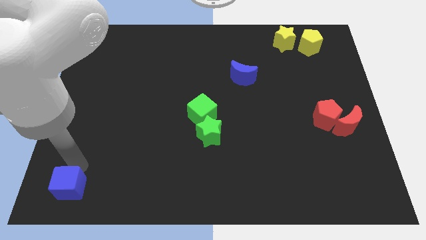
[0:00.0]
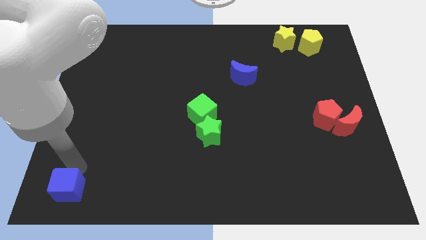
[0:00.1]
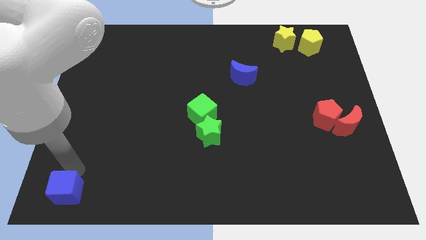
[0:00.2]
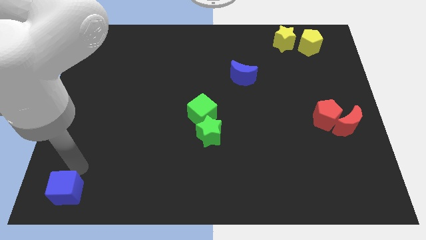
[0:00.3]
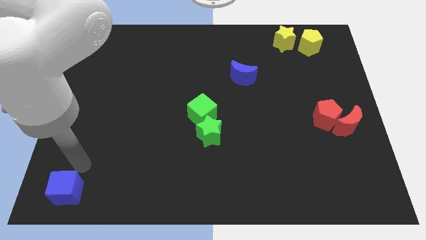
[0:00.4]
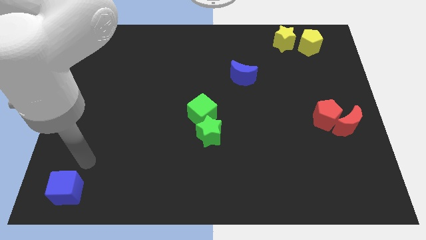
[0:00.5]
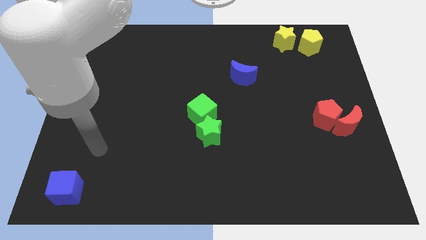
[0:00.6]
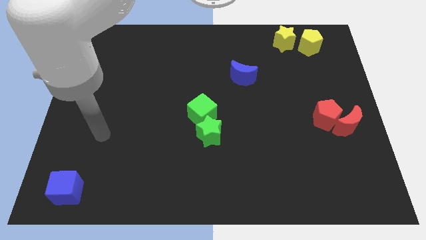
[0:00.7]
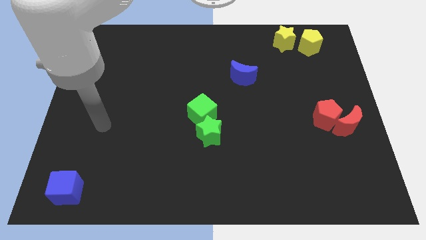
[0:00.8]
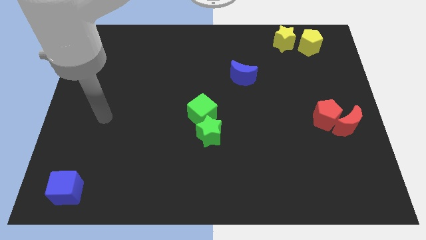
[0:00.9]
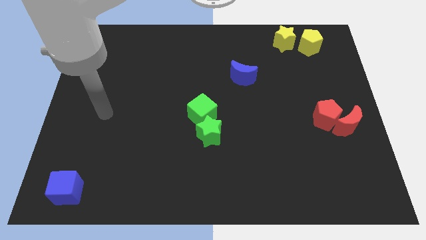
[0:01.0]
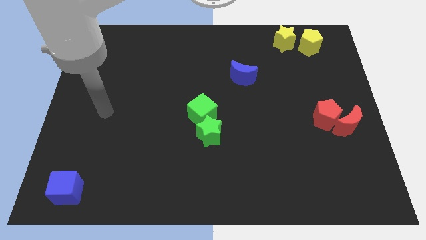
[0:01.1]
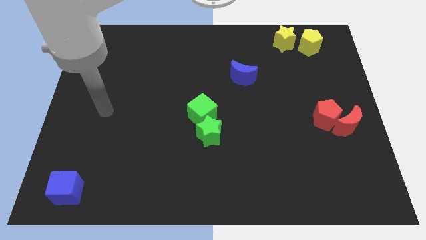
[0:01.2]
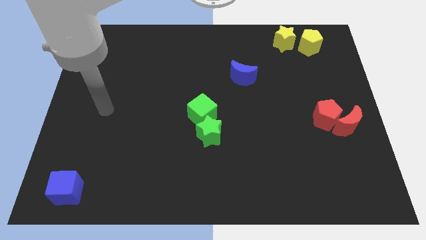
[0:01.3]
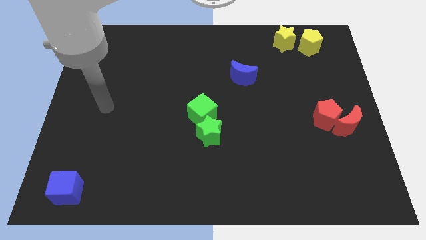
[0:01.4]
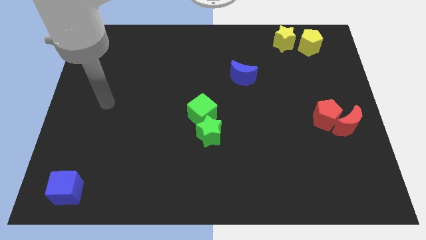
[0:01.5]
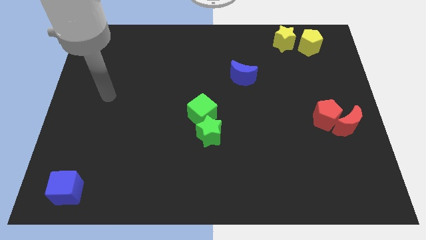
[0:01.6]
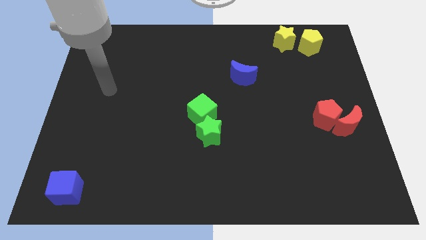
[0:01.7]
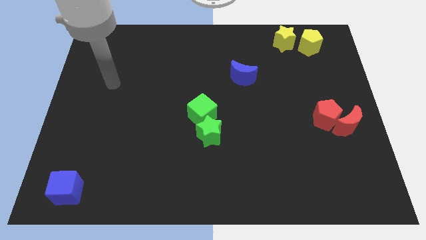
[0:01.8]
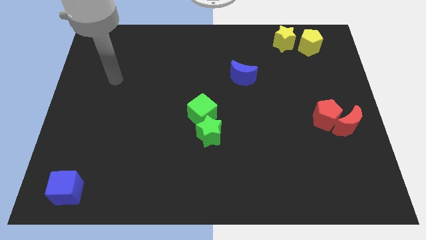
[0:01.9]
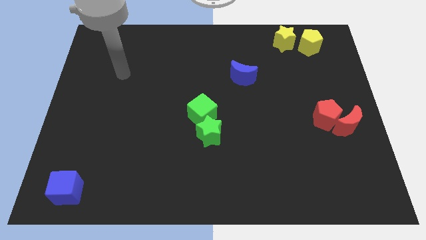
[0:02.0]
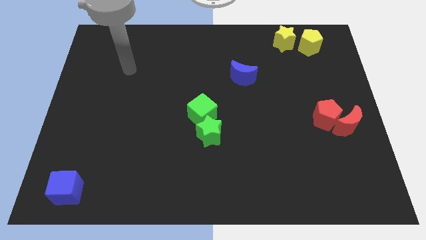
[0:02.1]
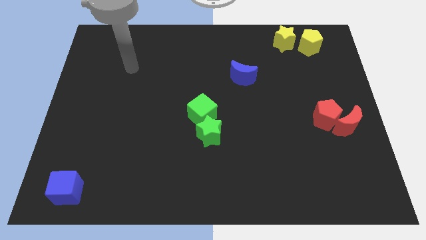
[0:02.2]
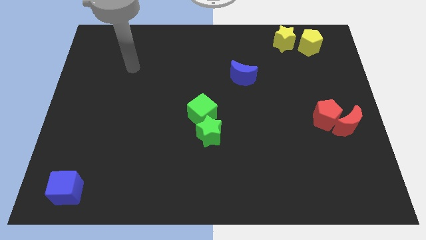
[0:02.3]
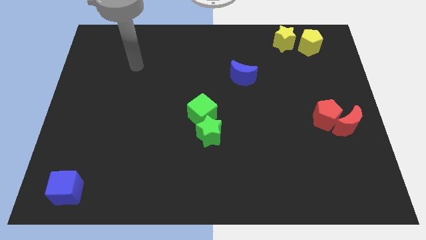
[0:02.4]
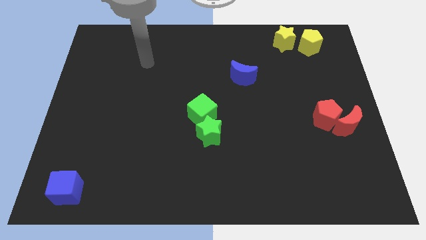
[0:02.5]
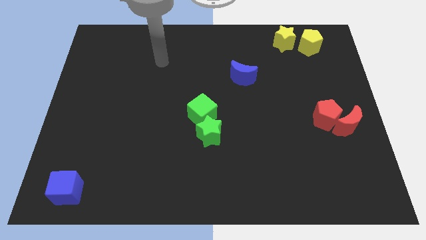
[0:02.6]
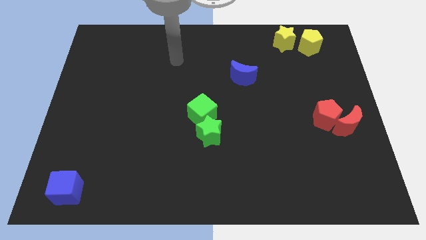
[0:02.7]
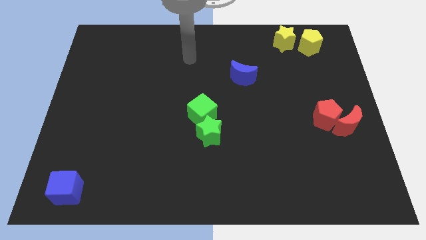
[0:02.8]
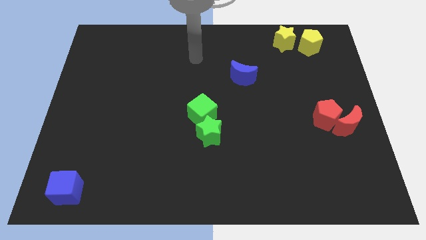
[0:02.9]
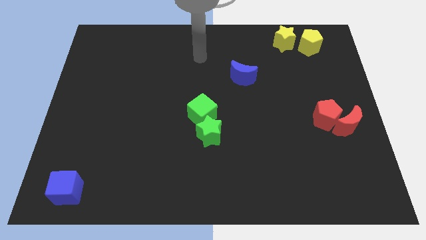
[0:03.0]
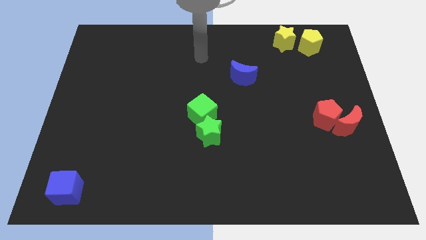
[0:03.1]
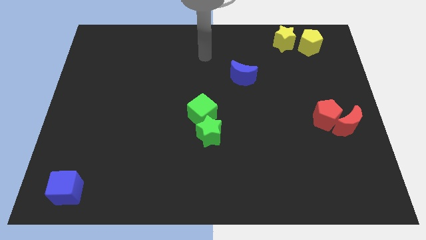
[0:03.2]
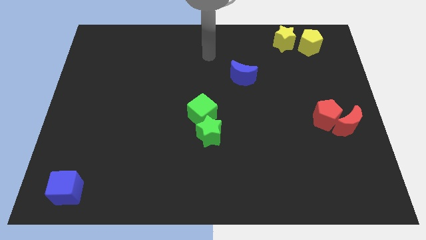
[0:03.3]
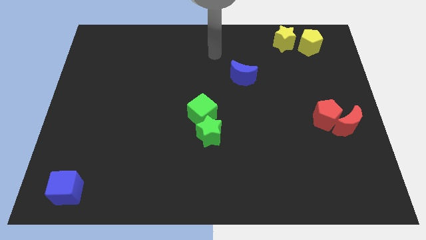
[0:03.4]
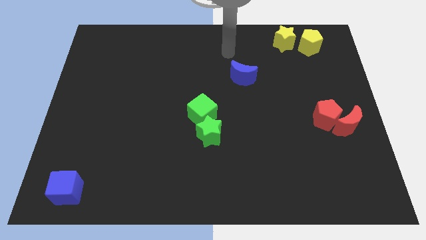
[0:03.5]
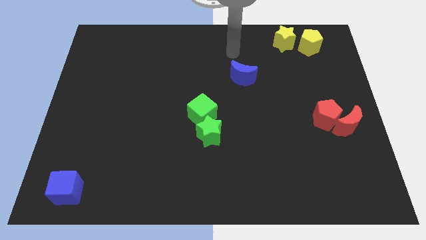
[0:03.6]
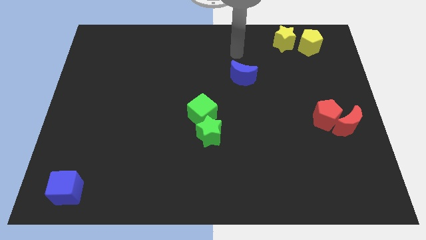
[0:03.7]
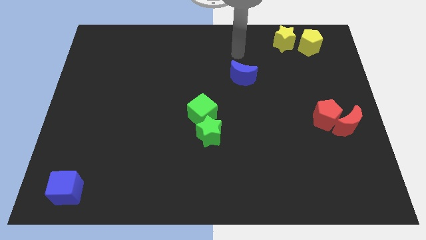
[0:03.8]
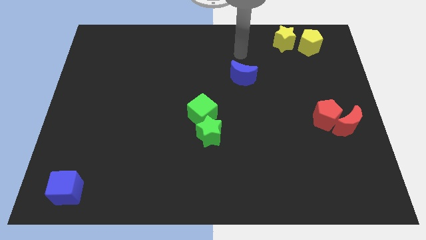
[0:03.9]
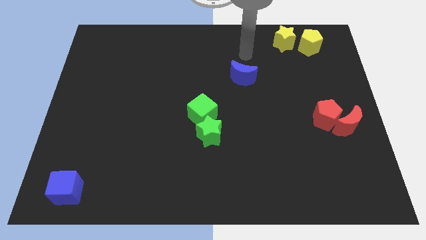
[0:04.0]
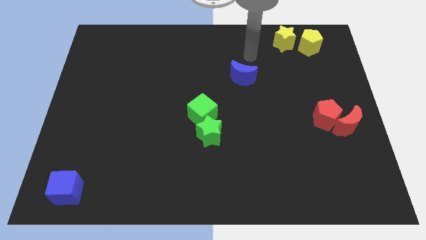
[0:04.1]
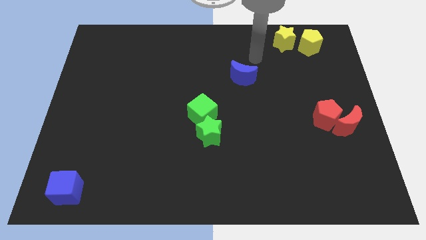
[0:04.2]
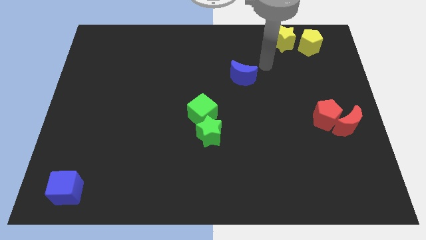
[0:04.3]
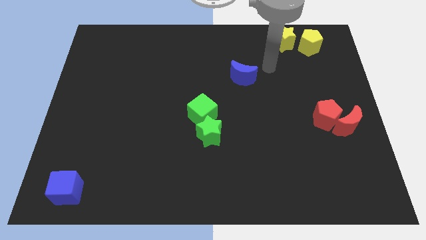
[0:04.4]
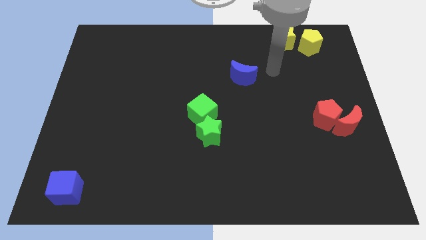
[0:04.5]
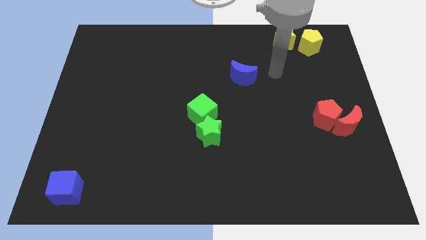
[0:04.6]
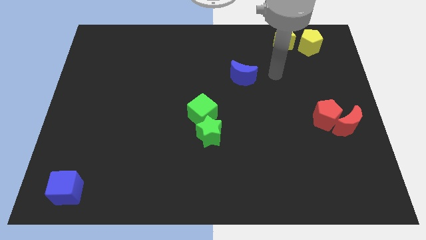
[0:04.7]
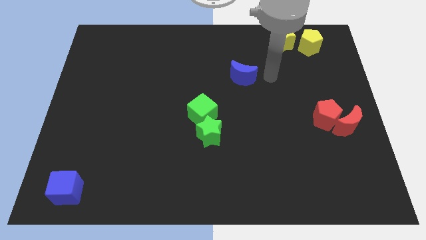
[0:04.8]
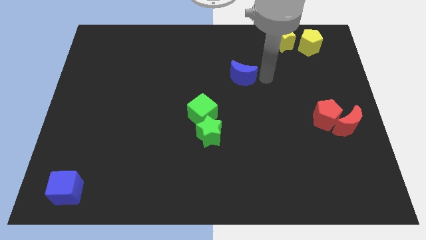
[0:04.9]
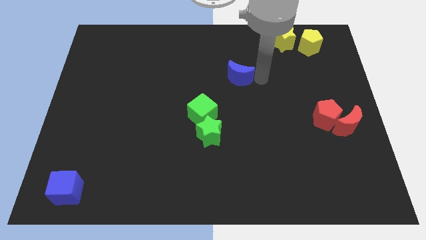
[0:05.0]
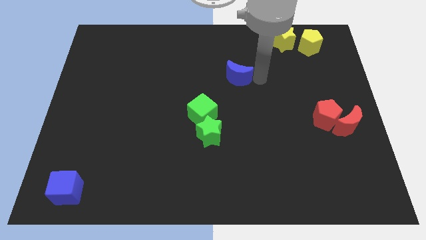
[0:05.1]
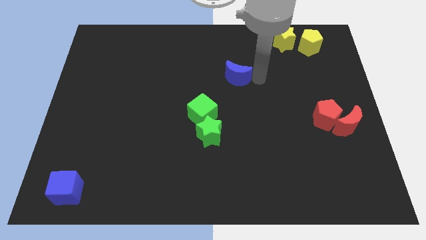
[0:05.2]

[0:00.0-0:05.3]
point your arm close to blue moon

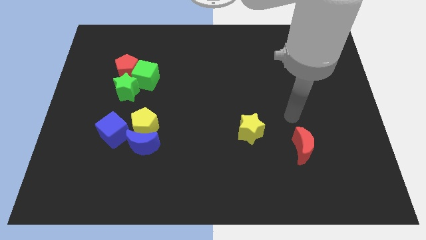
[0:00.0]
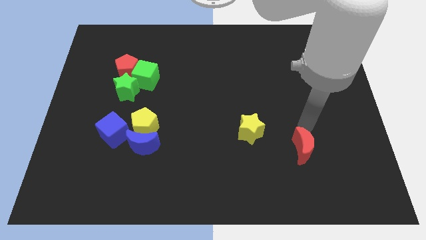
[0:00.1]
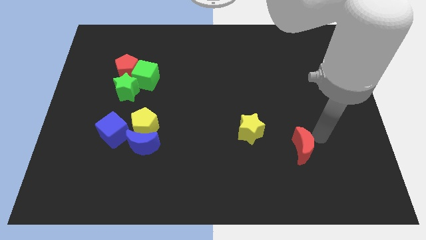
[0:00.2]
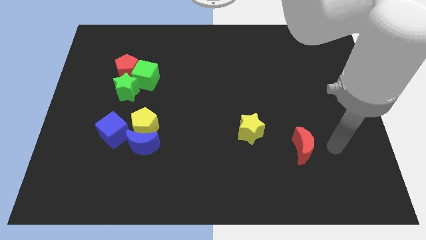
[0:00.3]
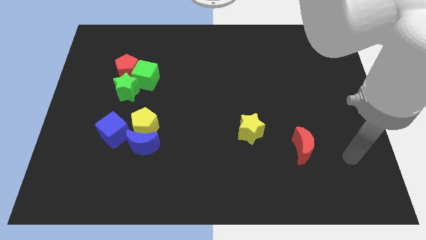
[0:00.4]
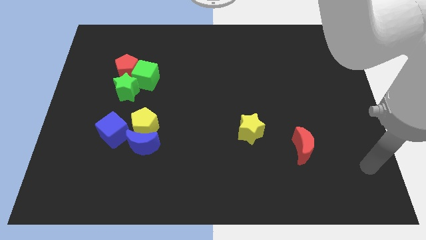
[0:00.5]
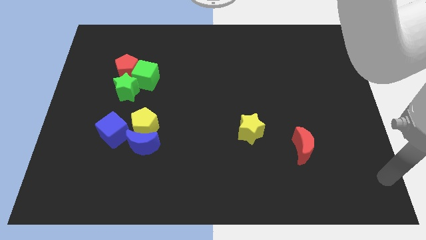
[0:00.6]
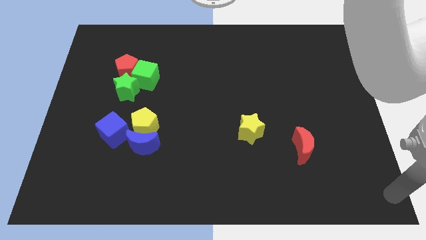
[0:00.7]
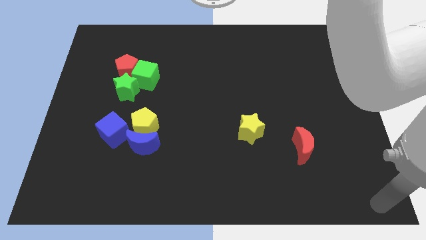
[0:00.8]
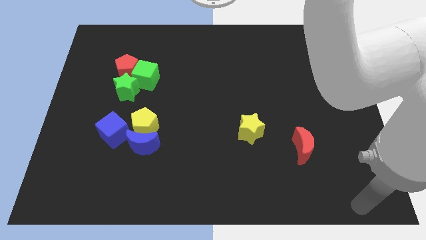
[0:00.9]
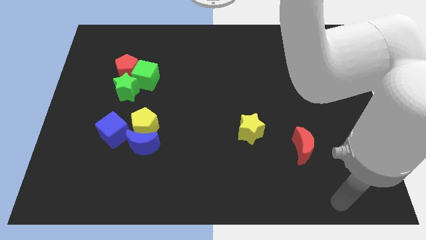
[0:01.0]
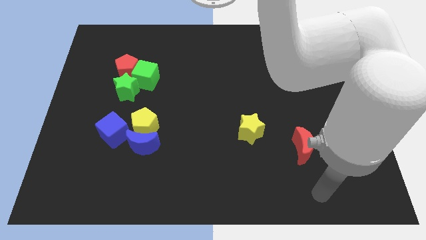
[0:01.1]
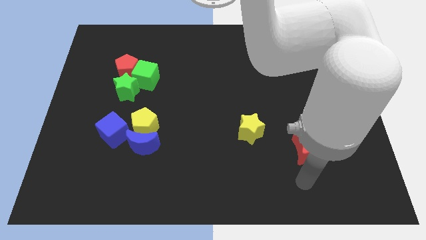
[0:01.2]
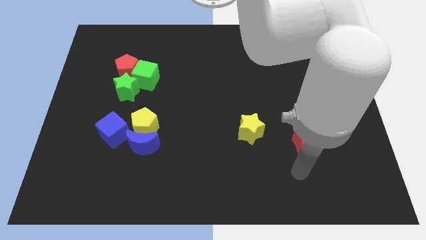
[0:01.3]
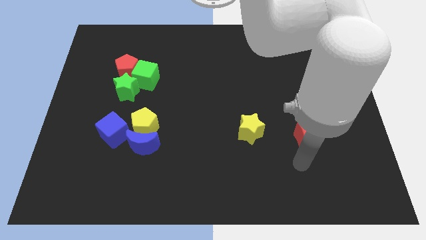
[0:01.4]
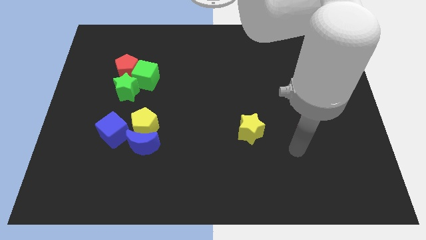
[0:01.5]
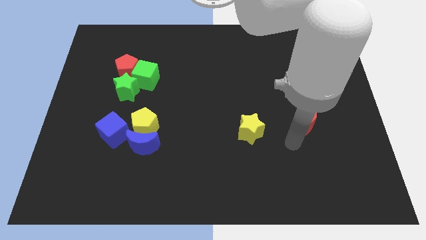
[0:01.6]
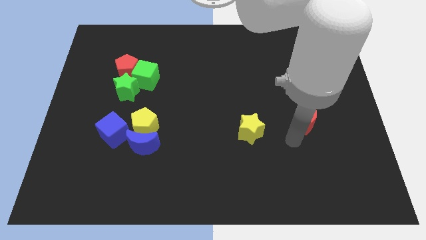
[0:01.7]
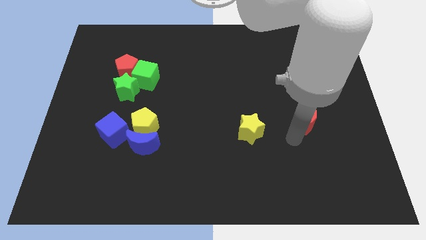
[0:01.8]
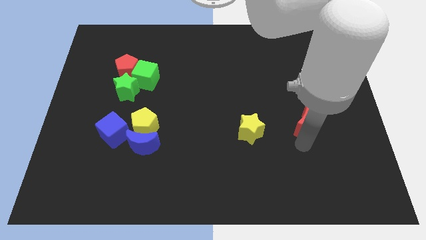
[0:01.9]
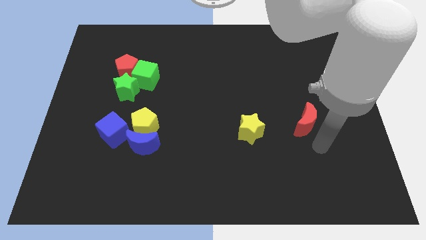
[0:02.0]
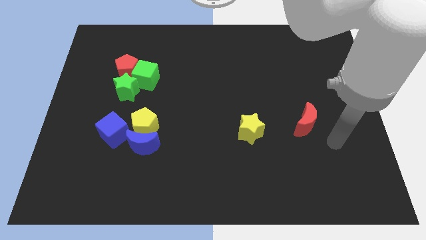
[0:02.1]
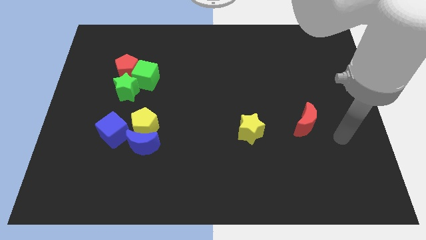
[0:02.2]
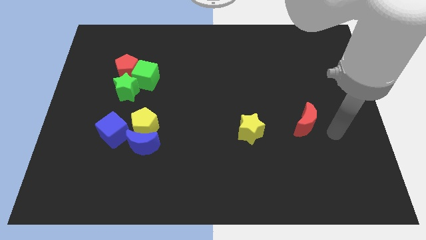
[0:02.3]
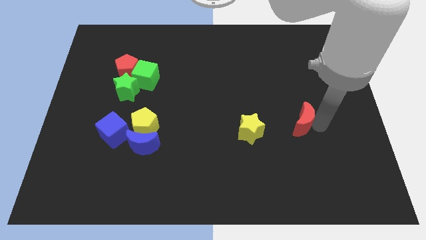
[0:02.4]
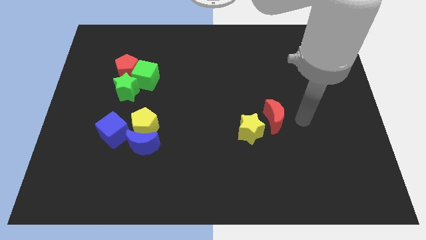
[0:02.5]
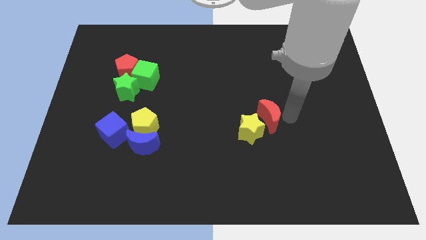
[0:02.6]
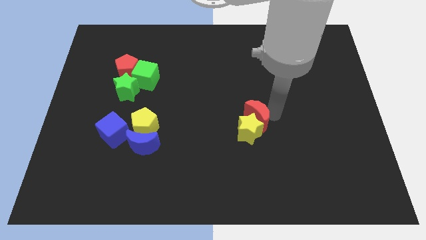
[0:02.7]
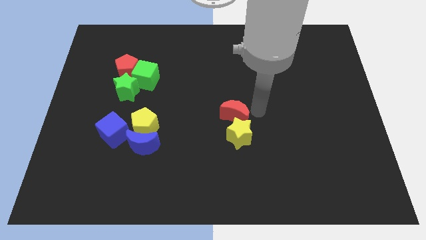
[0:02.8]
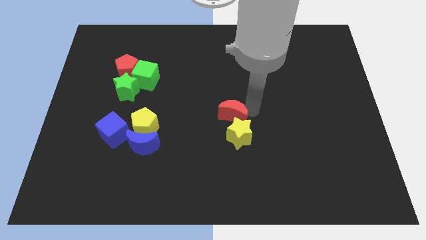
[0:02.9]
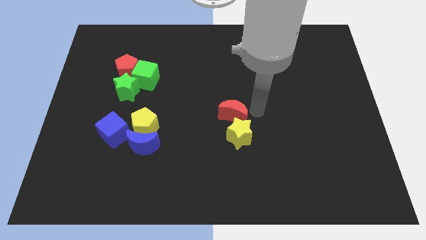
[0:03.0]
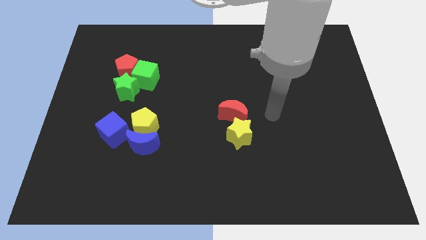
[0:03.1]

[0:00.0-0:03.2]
move the red moon above the yellow star

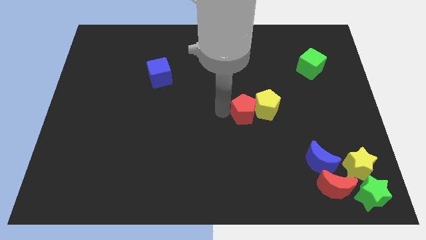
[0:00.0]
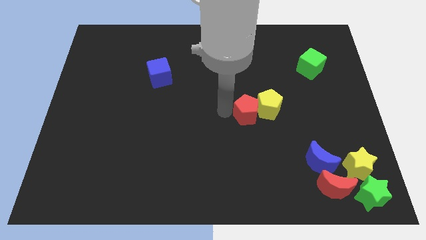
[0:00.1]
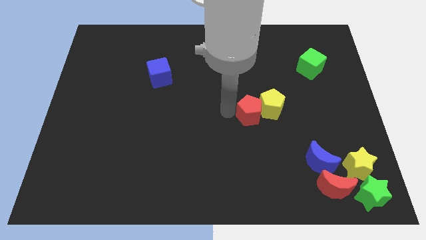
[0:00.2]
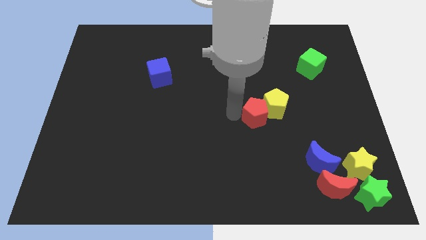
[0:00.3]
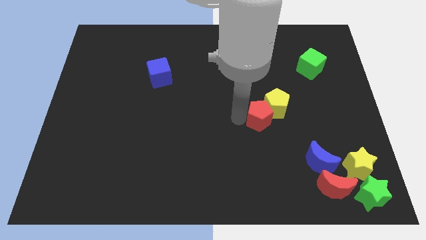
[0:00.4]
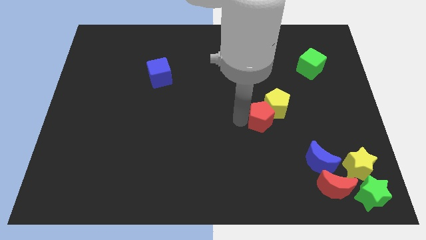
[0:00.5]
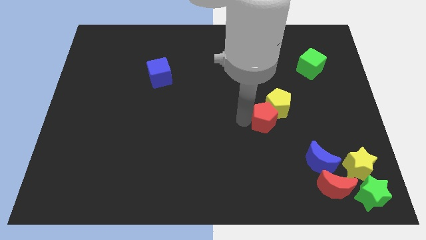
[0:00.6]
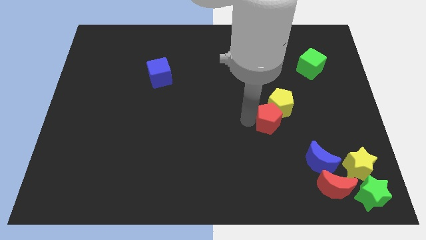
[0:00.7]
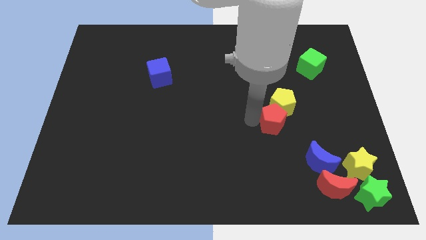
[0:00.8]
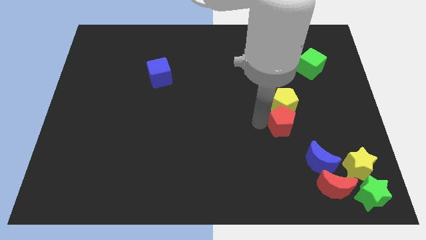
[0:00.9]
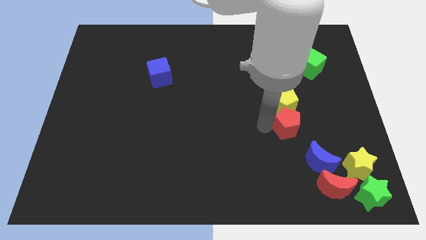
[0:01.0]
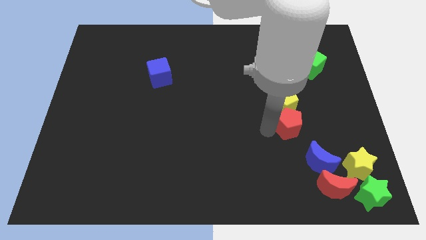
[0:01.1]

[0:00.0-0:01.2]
move red pentagon to the bottom of the yellow pentagon
